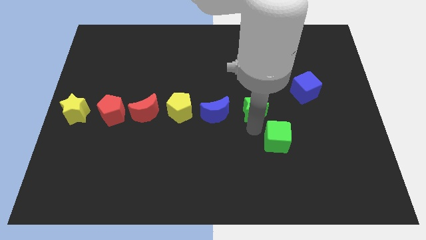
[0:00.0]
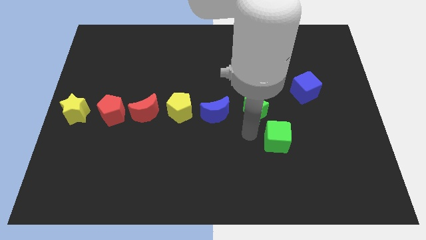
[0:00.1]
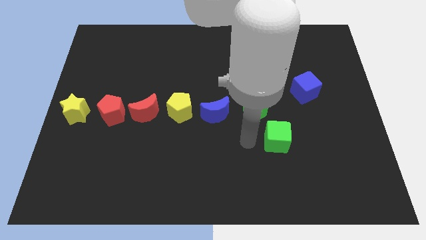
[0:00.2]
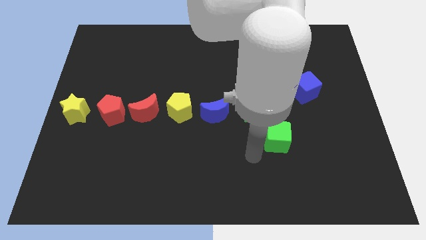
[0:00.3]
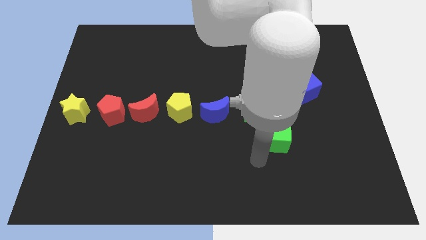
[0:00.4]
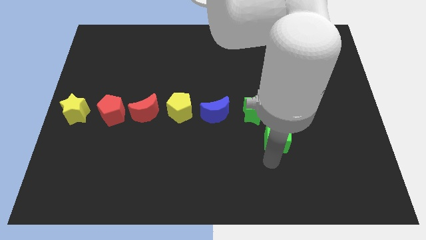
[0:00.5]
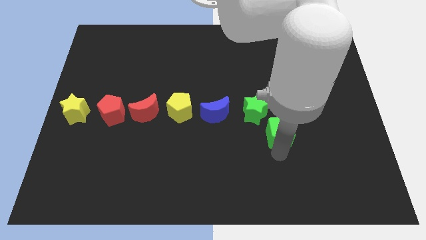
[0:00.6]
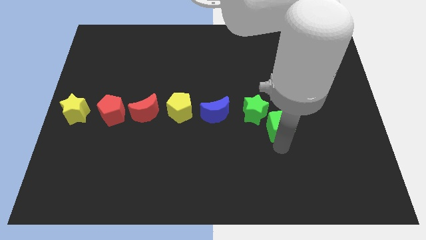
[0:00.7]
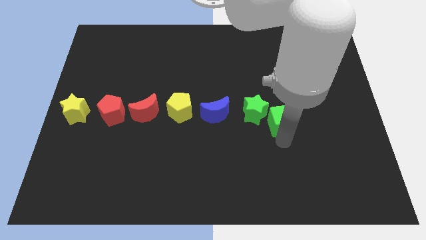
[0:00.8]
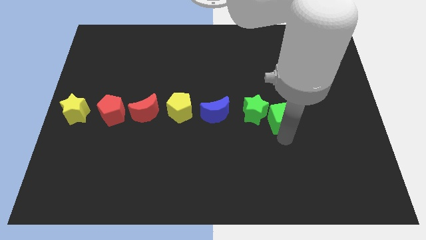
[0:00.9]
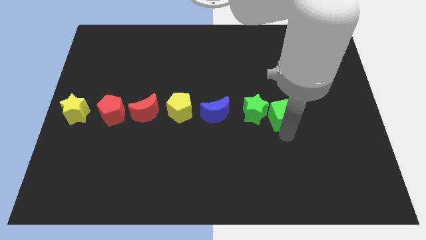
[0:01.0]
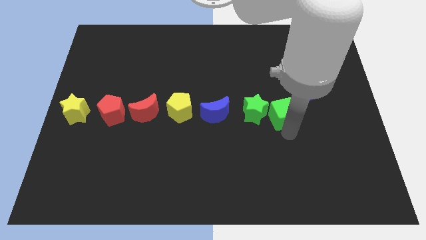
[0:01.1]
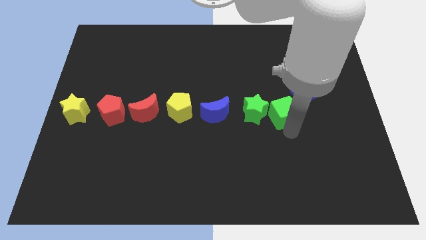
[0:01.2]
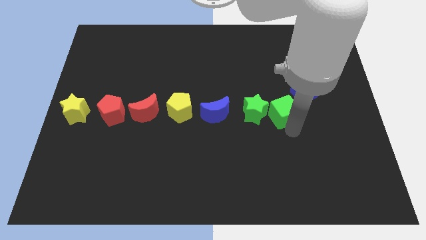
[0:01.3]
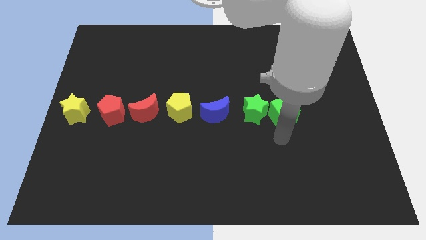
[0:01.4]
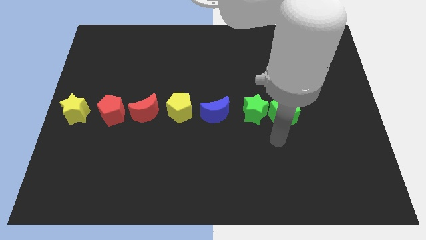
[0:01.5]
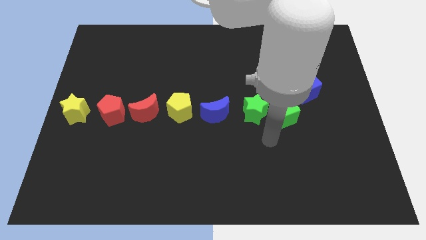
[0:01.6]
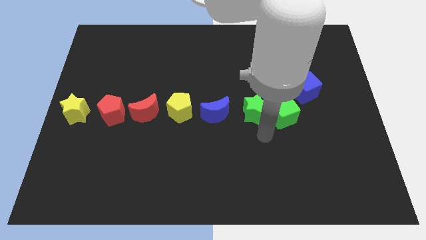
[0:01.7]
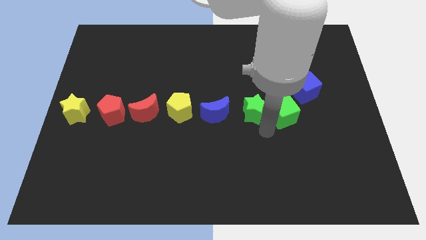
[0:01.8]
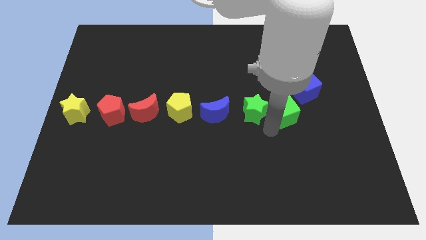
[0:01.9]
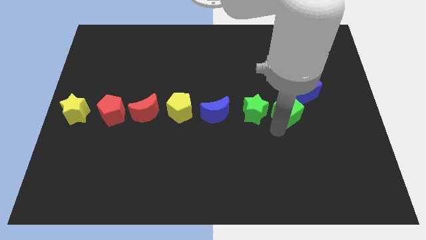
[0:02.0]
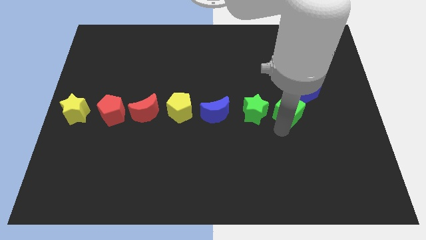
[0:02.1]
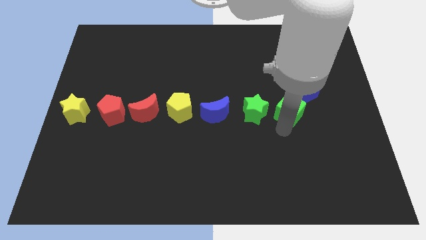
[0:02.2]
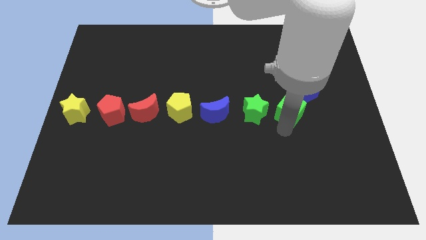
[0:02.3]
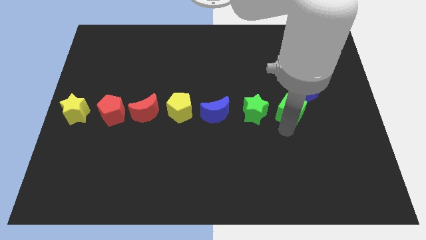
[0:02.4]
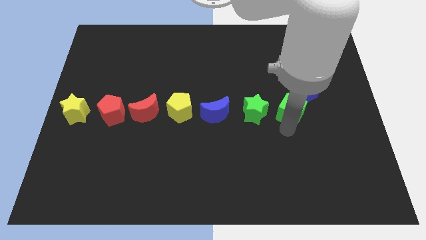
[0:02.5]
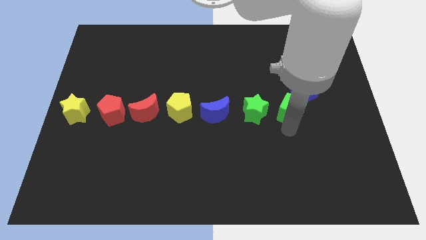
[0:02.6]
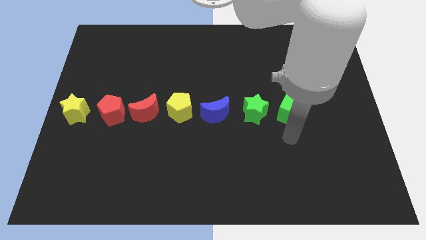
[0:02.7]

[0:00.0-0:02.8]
push green cube towards blue cube

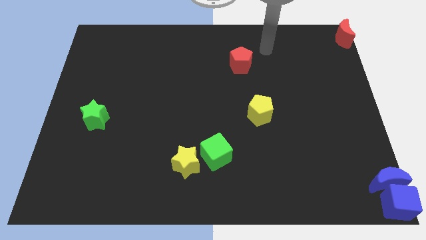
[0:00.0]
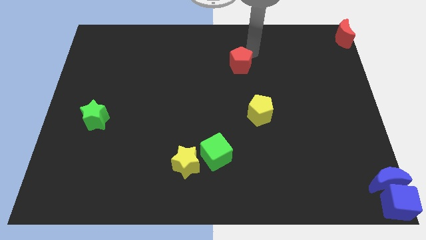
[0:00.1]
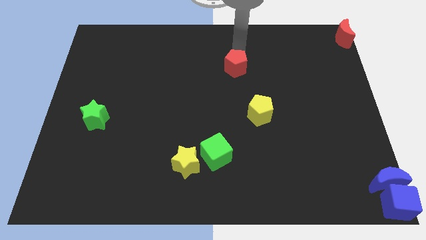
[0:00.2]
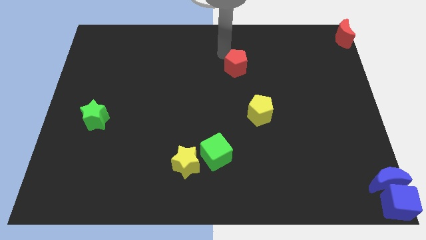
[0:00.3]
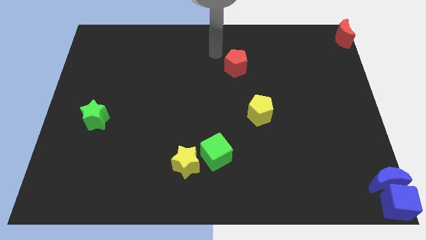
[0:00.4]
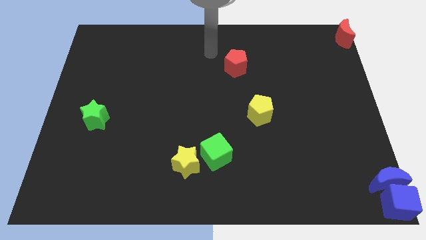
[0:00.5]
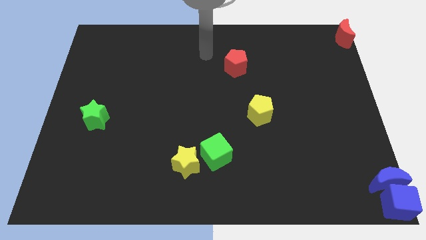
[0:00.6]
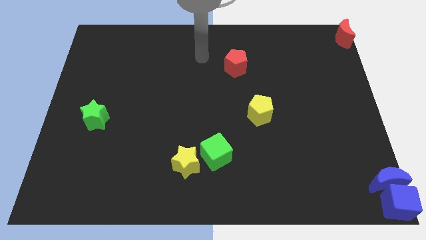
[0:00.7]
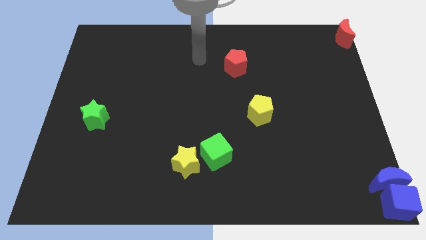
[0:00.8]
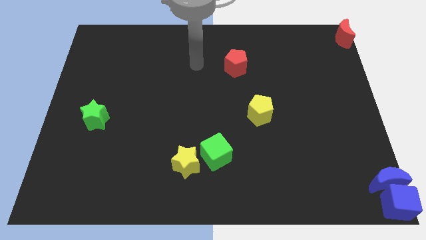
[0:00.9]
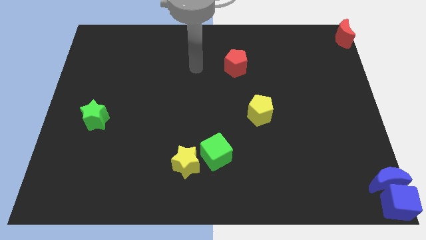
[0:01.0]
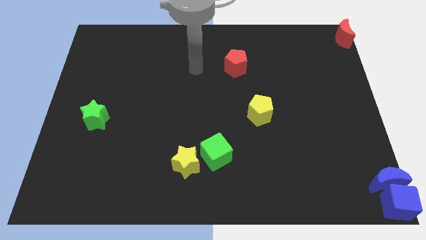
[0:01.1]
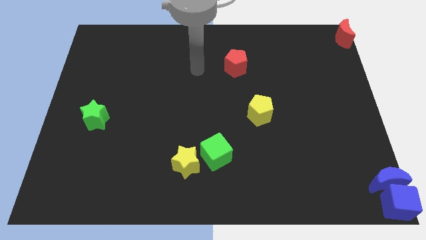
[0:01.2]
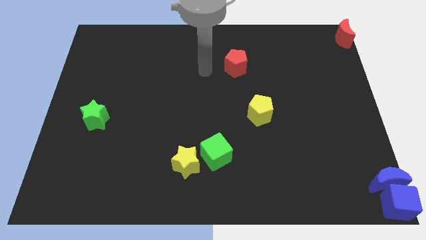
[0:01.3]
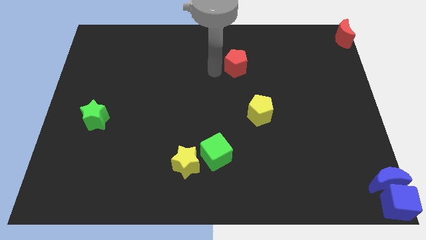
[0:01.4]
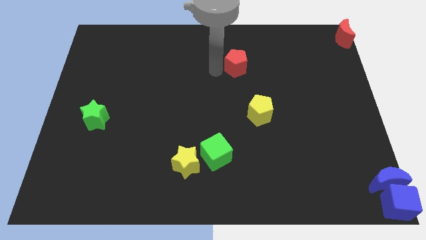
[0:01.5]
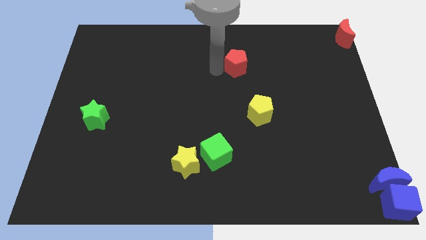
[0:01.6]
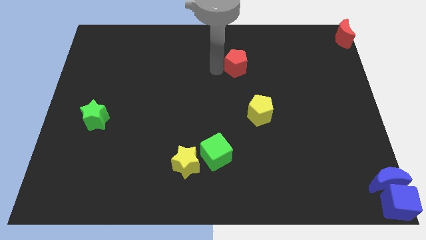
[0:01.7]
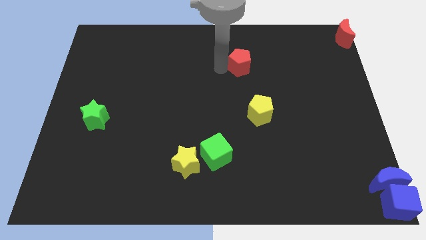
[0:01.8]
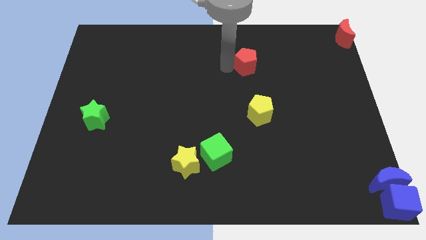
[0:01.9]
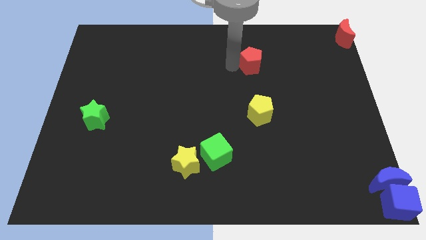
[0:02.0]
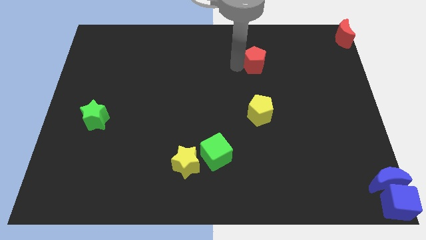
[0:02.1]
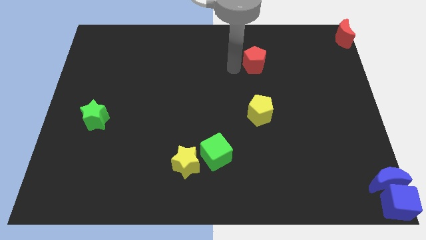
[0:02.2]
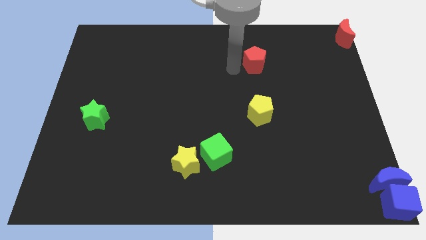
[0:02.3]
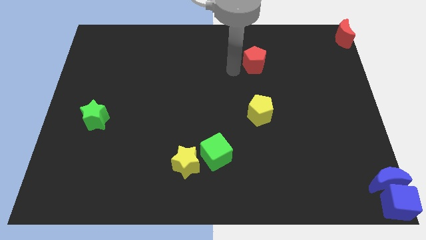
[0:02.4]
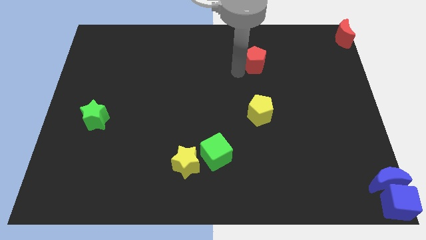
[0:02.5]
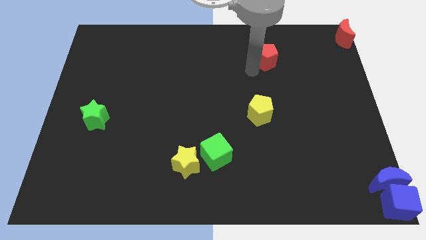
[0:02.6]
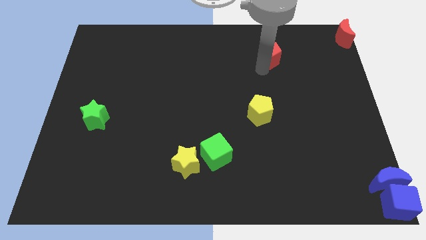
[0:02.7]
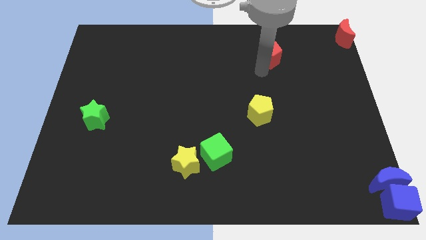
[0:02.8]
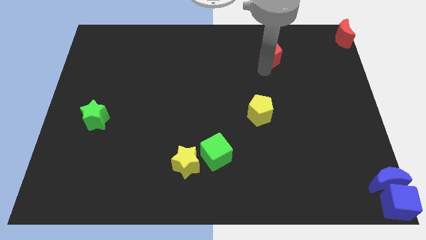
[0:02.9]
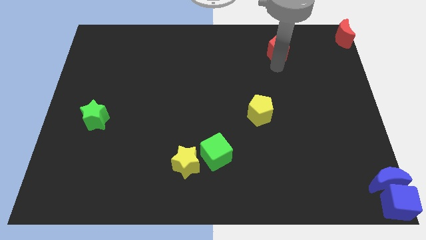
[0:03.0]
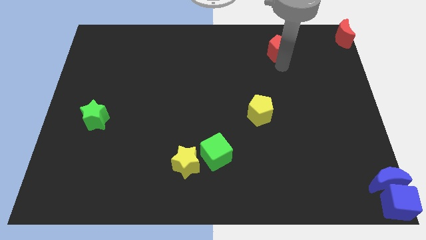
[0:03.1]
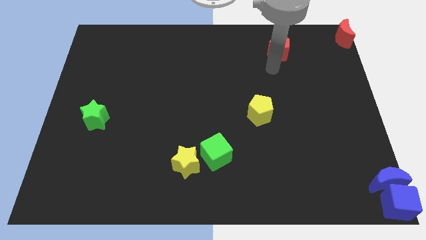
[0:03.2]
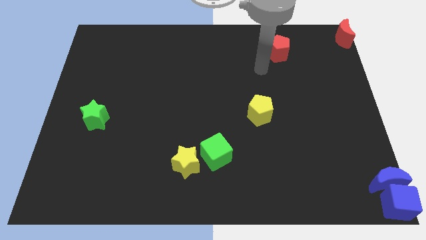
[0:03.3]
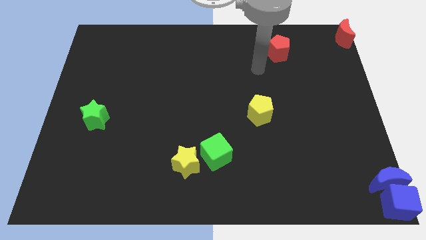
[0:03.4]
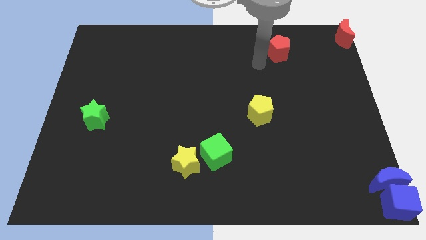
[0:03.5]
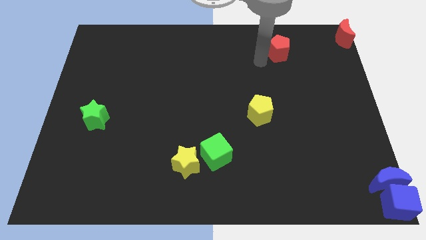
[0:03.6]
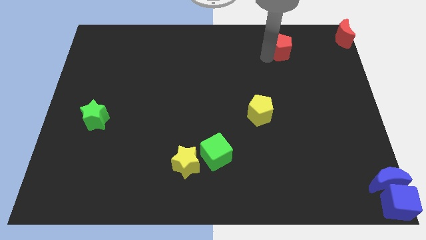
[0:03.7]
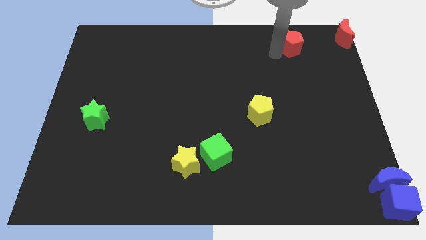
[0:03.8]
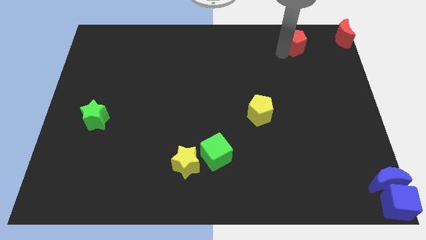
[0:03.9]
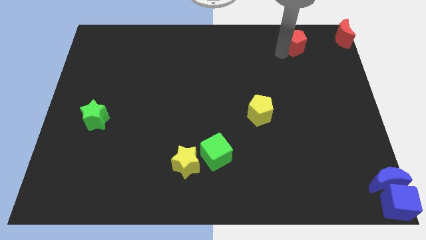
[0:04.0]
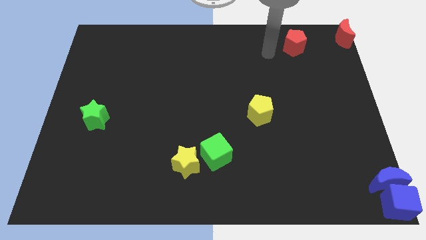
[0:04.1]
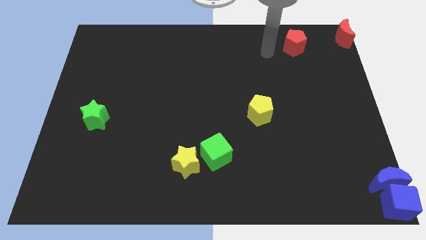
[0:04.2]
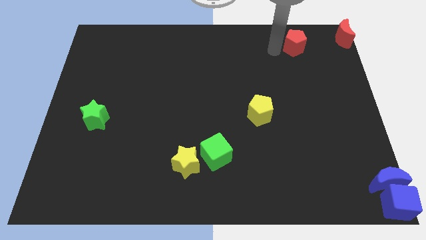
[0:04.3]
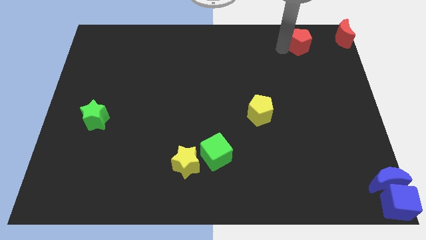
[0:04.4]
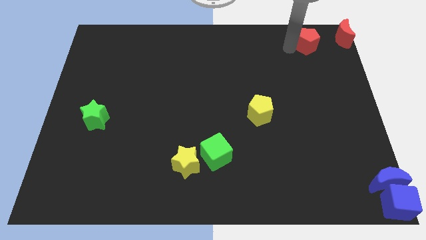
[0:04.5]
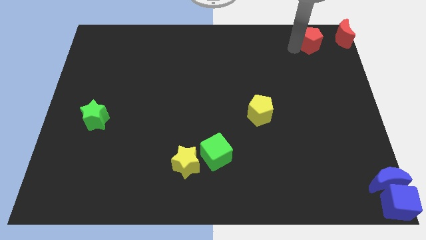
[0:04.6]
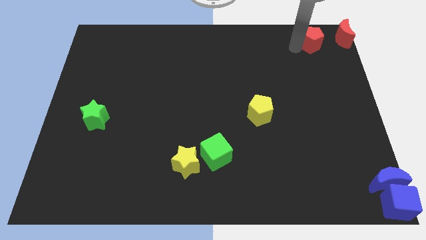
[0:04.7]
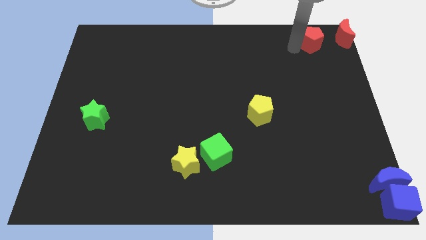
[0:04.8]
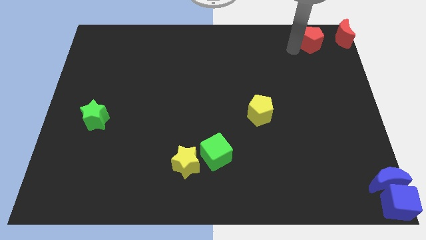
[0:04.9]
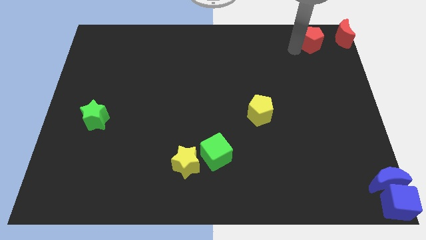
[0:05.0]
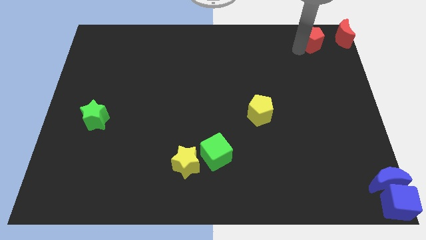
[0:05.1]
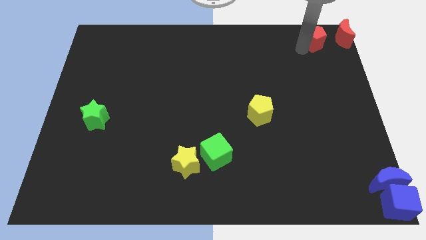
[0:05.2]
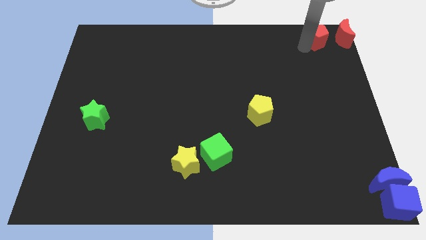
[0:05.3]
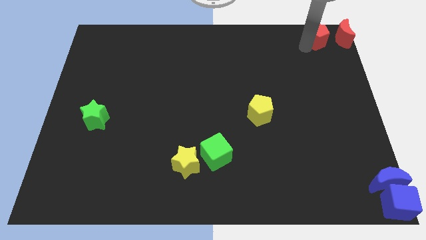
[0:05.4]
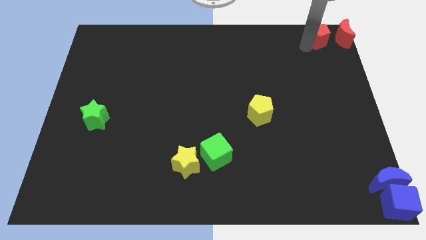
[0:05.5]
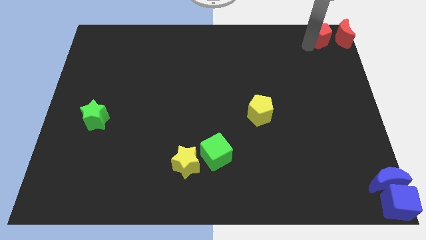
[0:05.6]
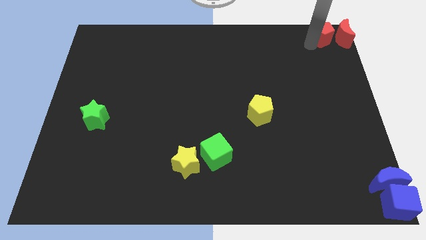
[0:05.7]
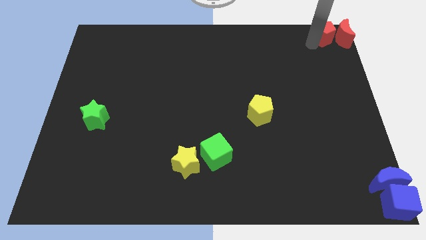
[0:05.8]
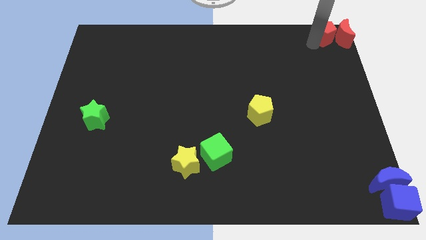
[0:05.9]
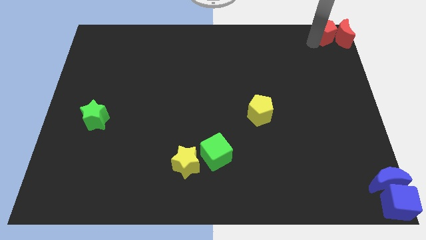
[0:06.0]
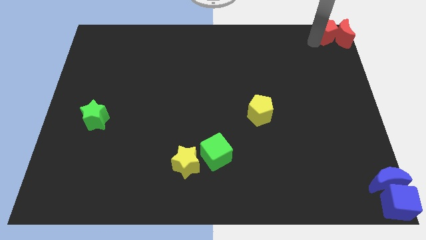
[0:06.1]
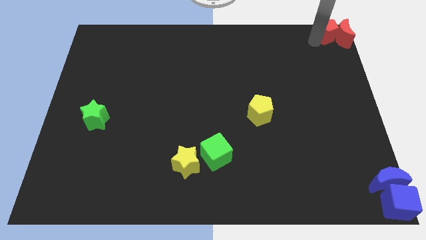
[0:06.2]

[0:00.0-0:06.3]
move the red pentagon to the left of the red crescent
